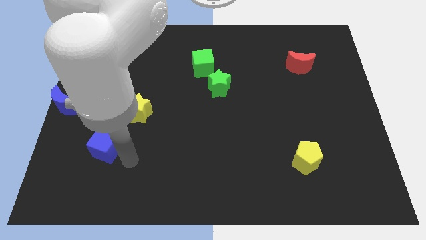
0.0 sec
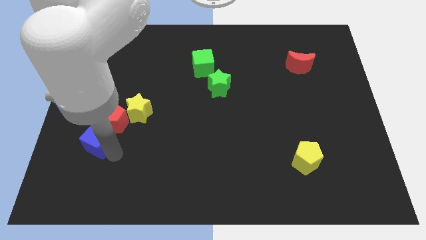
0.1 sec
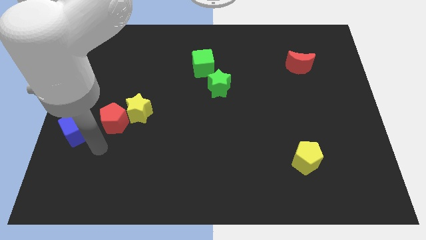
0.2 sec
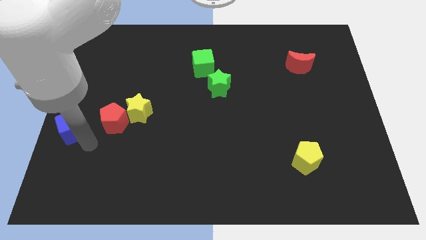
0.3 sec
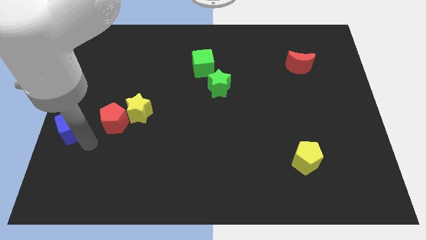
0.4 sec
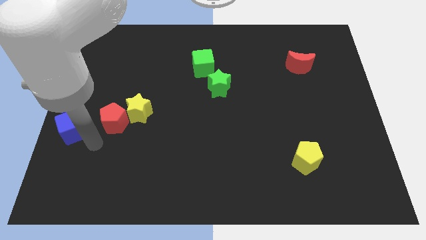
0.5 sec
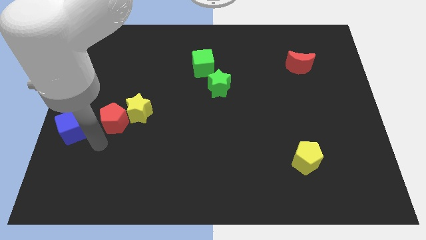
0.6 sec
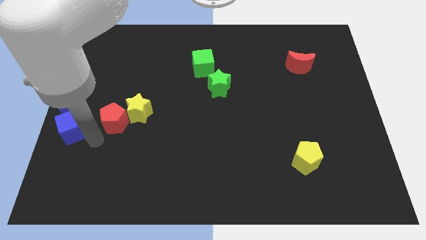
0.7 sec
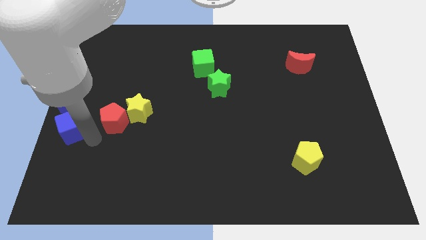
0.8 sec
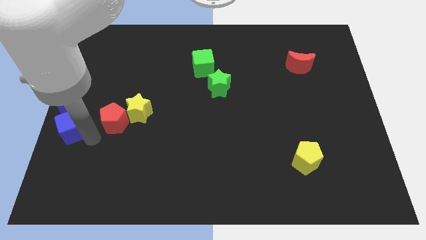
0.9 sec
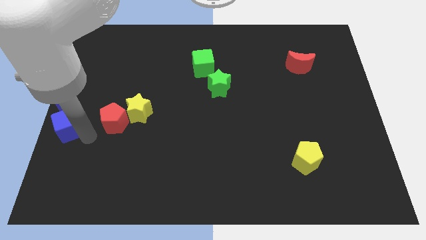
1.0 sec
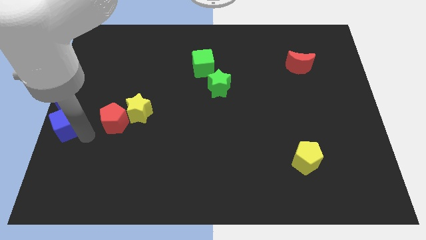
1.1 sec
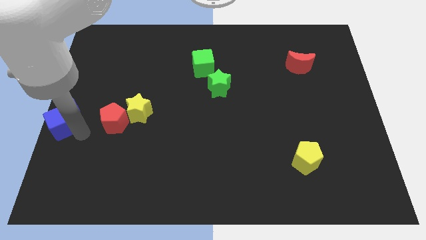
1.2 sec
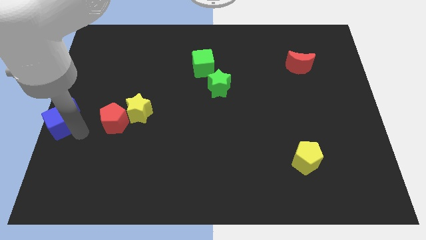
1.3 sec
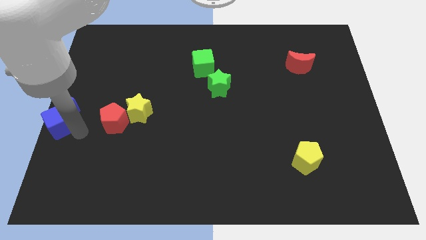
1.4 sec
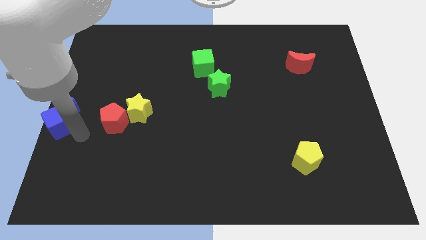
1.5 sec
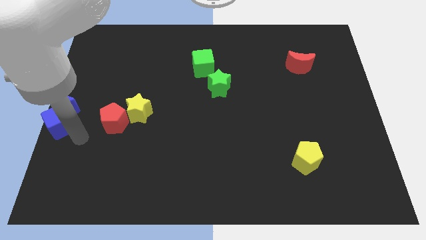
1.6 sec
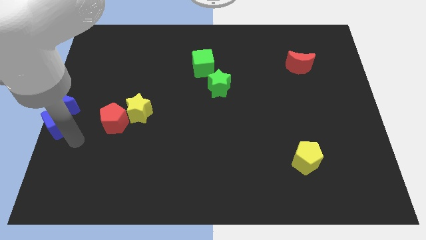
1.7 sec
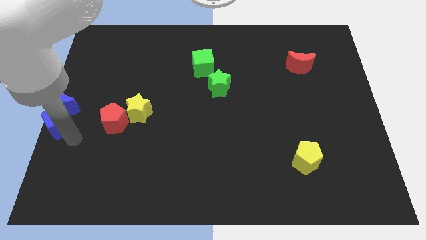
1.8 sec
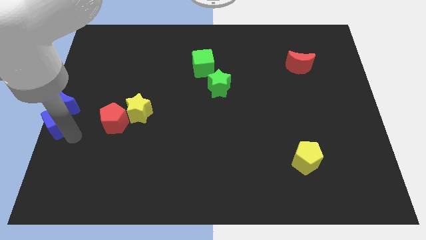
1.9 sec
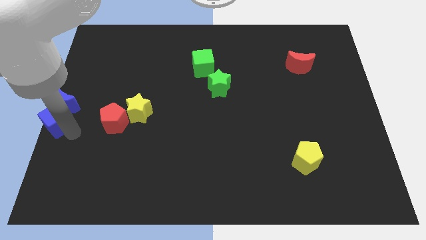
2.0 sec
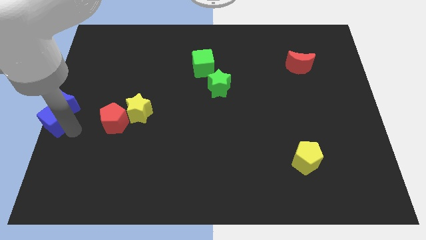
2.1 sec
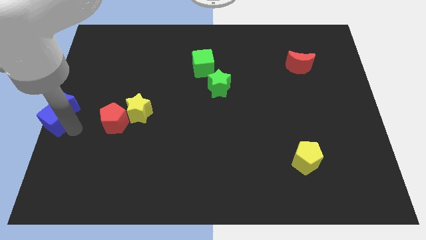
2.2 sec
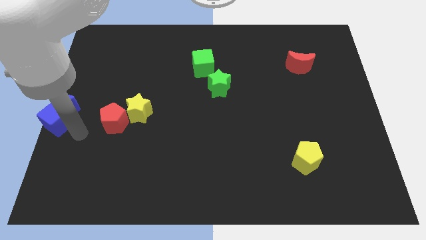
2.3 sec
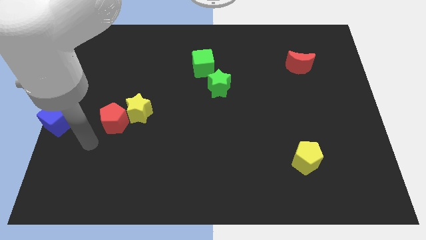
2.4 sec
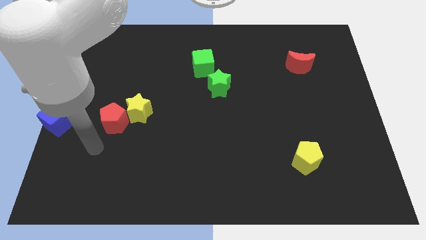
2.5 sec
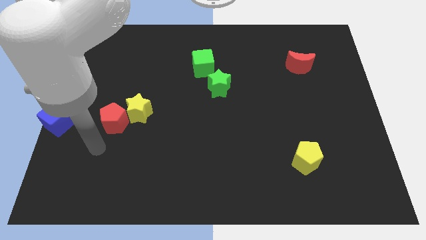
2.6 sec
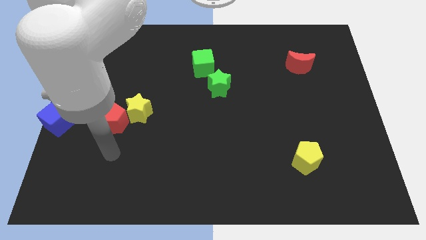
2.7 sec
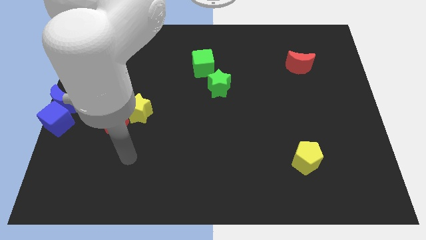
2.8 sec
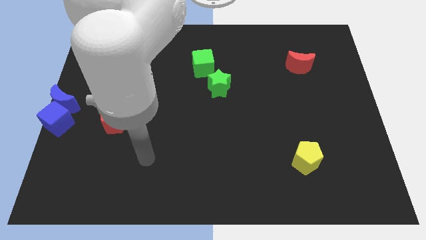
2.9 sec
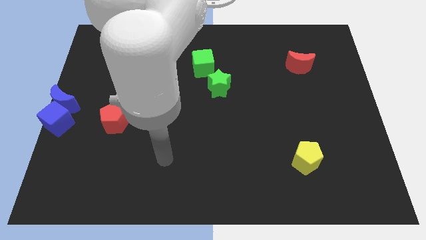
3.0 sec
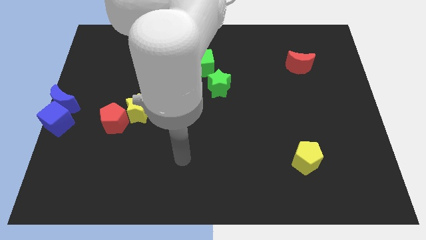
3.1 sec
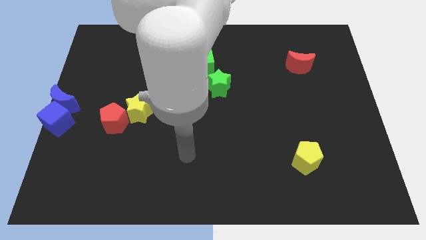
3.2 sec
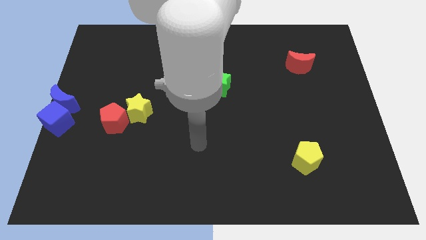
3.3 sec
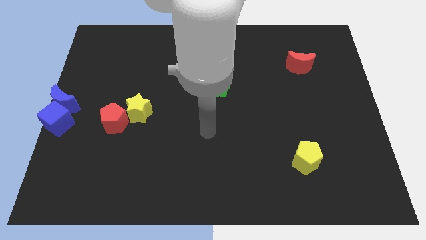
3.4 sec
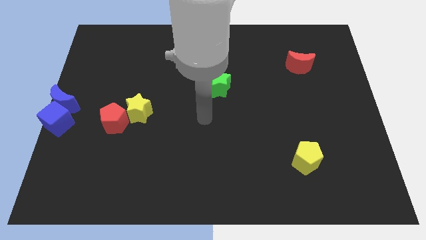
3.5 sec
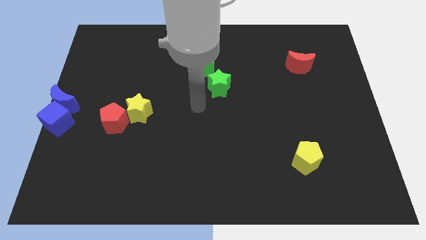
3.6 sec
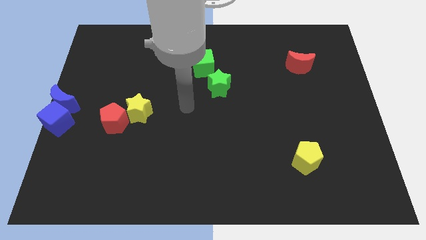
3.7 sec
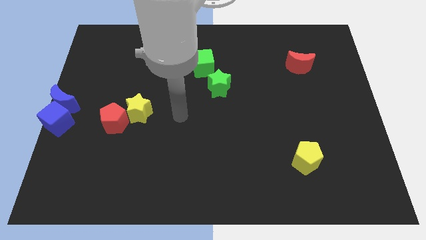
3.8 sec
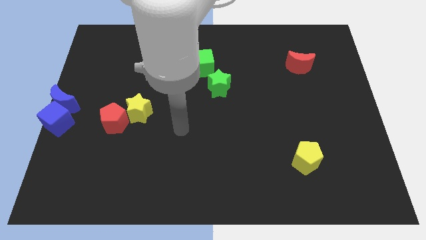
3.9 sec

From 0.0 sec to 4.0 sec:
slide the blue cube to the bottom of the blue moon

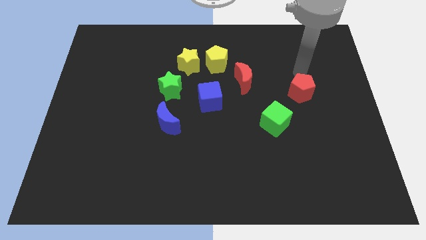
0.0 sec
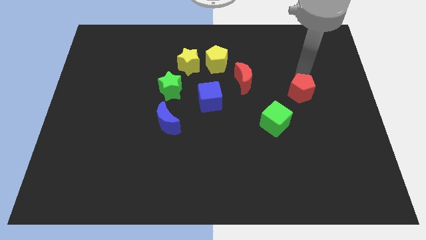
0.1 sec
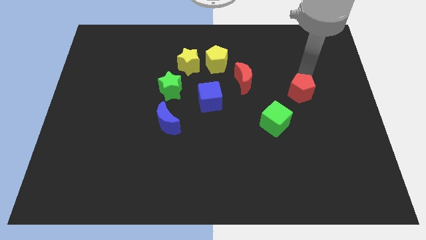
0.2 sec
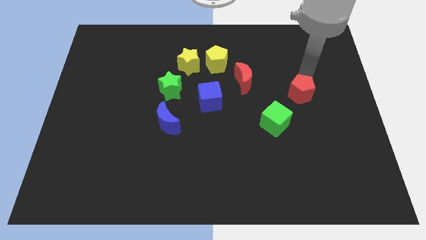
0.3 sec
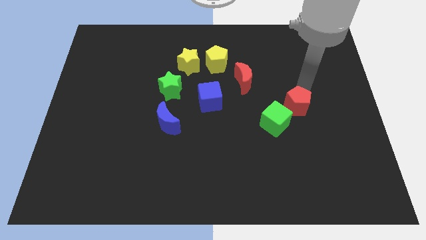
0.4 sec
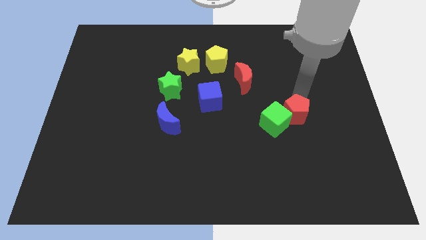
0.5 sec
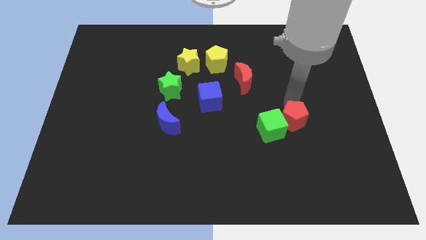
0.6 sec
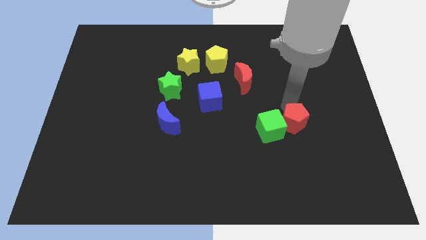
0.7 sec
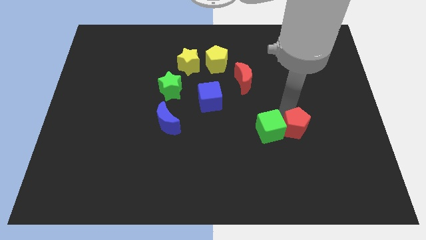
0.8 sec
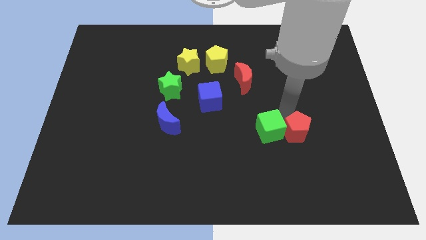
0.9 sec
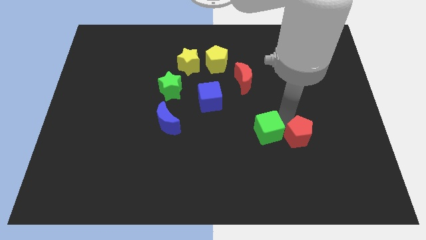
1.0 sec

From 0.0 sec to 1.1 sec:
push red pentagon into green cube

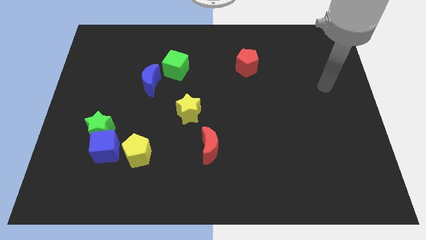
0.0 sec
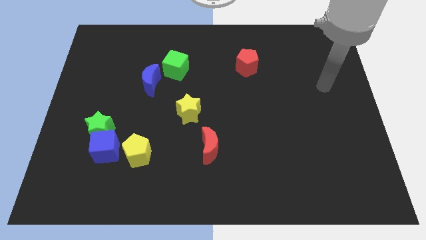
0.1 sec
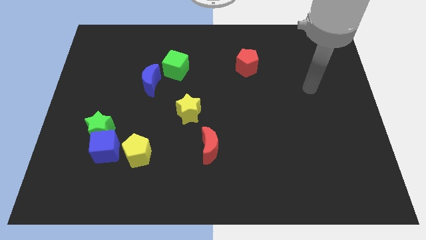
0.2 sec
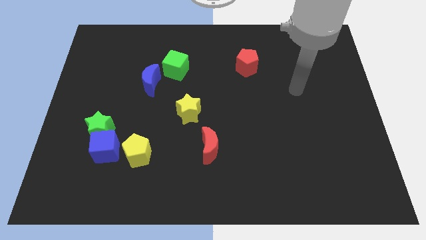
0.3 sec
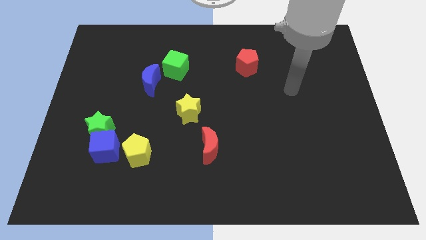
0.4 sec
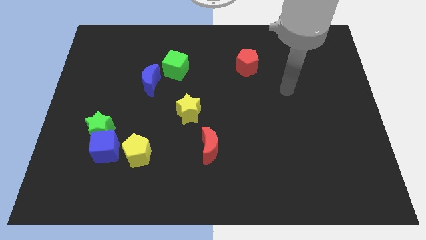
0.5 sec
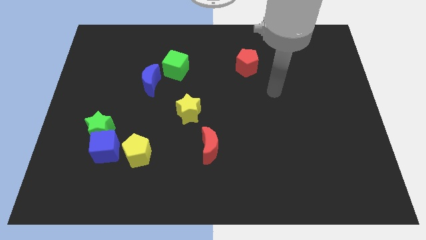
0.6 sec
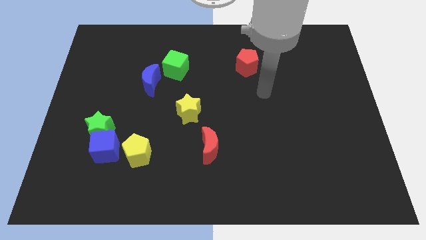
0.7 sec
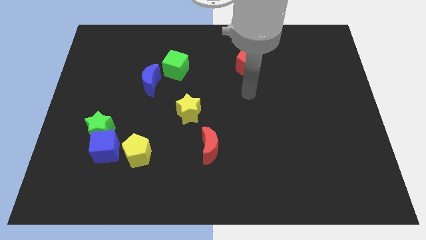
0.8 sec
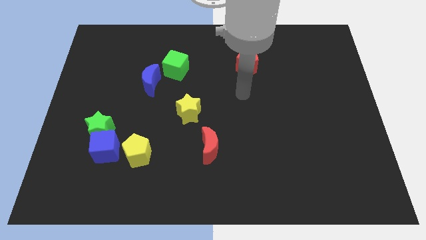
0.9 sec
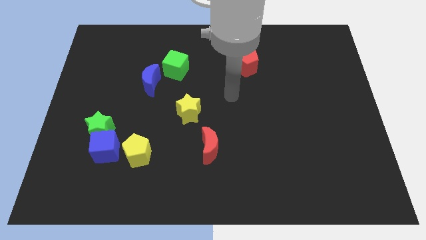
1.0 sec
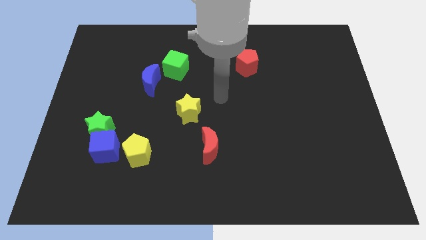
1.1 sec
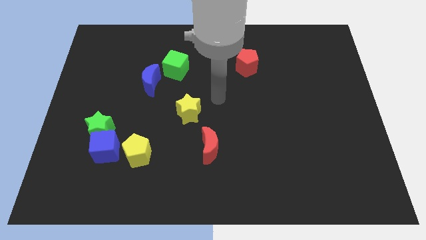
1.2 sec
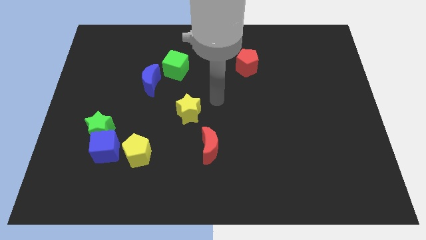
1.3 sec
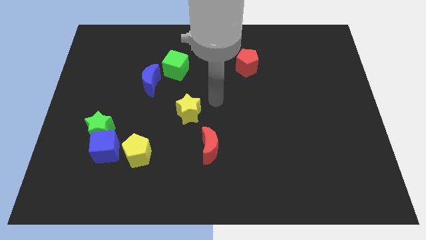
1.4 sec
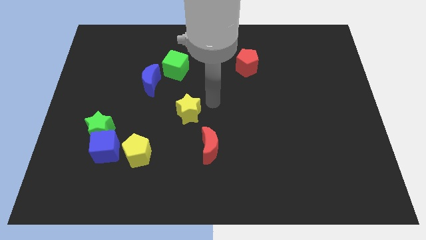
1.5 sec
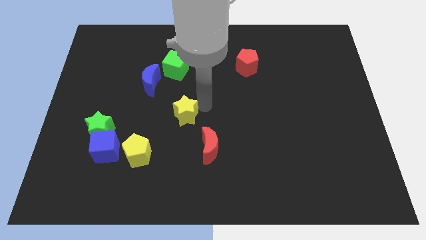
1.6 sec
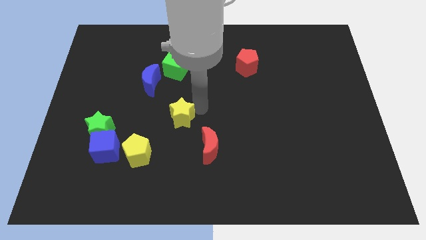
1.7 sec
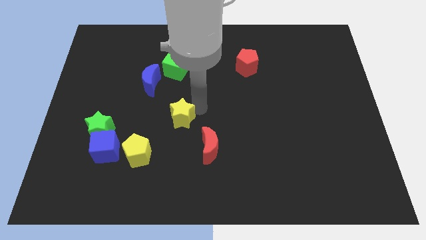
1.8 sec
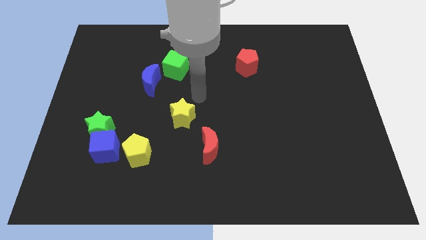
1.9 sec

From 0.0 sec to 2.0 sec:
push the yellow star towards left

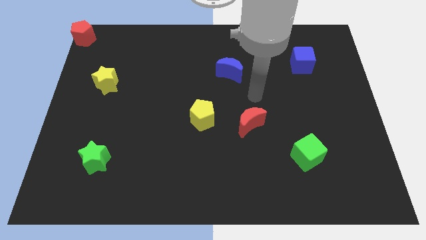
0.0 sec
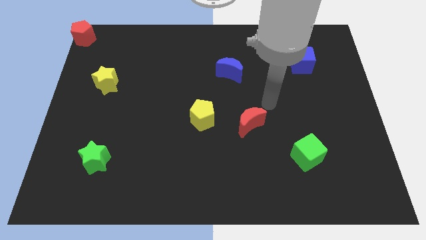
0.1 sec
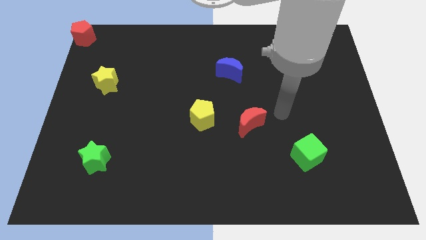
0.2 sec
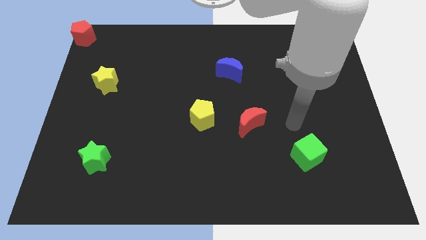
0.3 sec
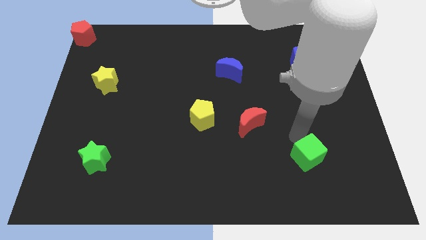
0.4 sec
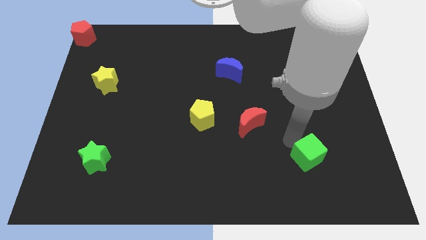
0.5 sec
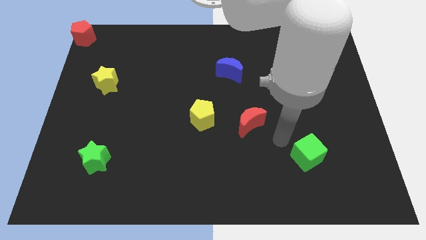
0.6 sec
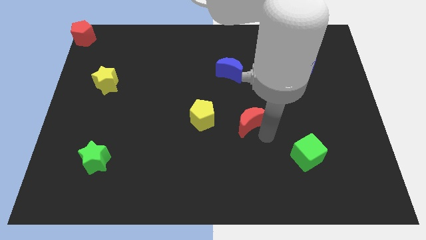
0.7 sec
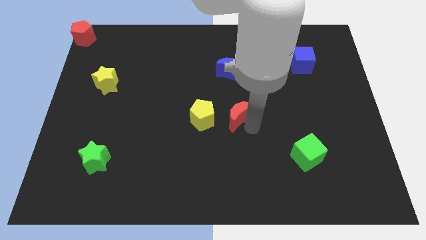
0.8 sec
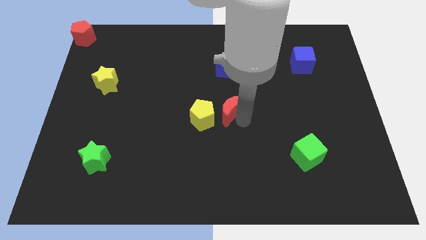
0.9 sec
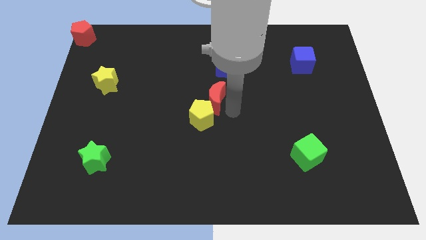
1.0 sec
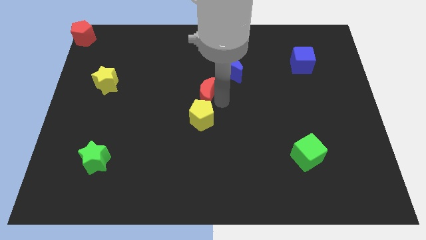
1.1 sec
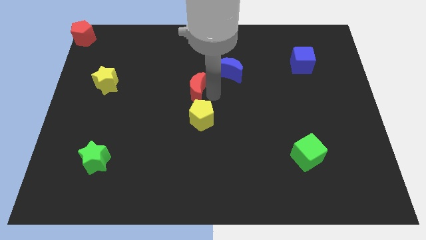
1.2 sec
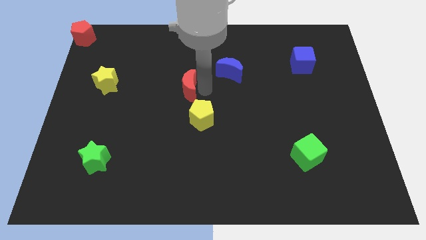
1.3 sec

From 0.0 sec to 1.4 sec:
place the red moon above the yellow pentagon

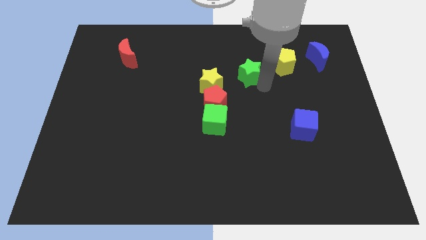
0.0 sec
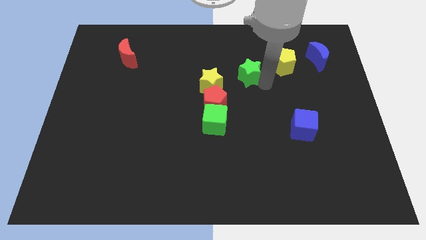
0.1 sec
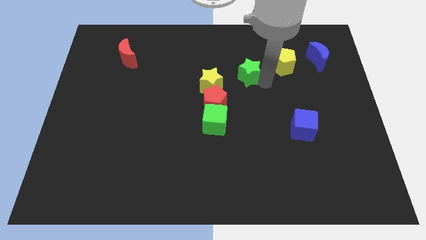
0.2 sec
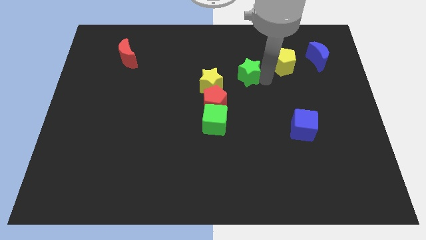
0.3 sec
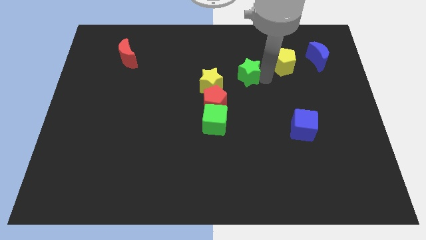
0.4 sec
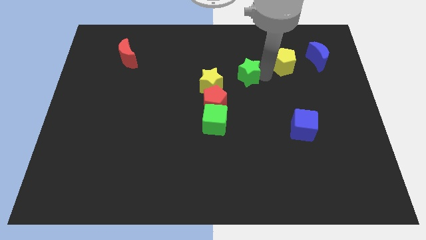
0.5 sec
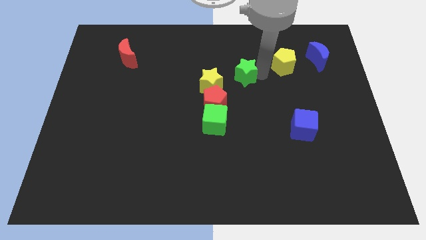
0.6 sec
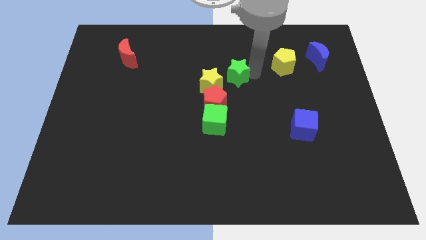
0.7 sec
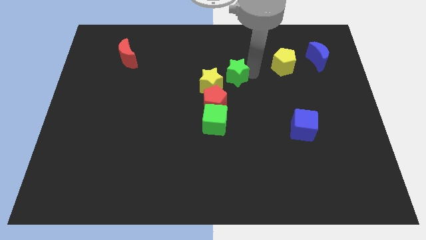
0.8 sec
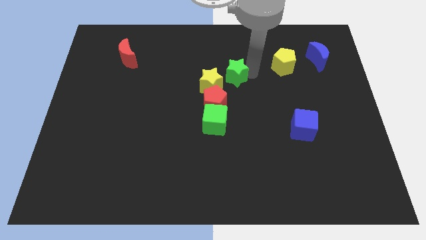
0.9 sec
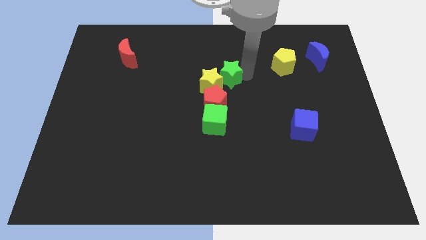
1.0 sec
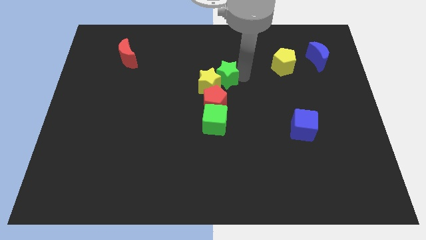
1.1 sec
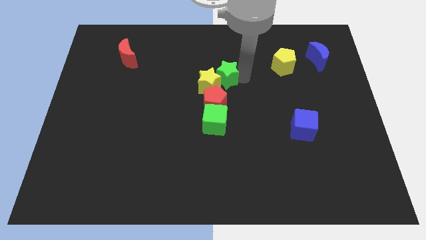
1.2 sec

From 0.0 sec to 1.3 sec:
push green star into yellow star
